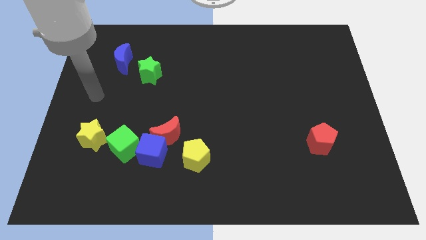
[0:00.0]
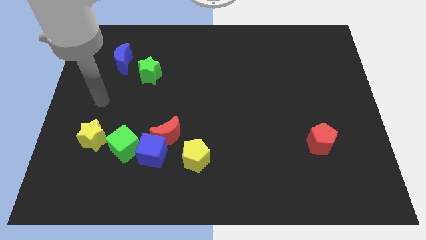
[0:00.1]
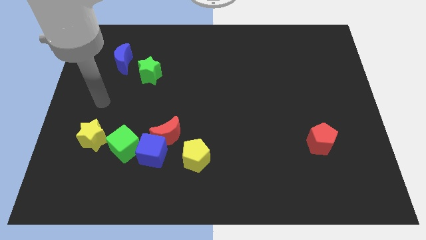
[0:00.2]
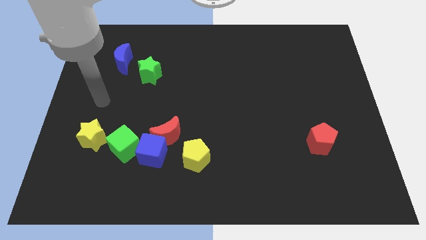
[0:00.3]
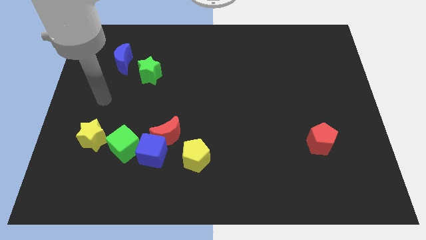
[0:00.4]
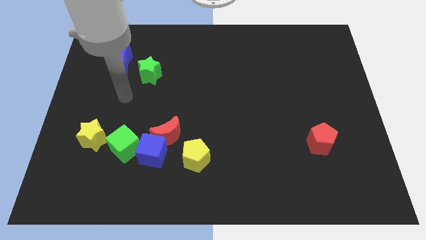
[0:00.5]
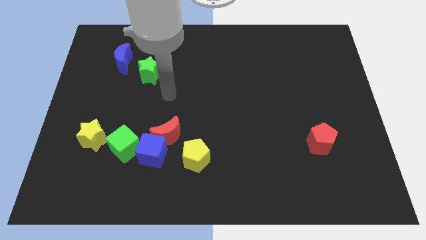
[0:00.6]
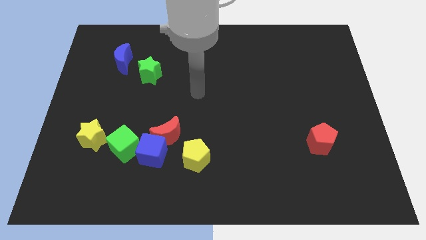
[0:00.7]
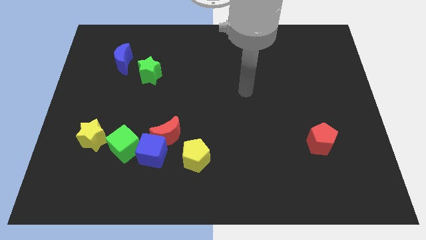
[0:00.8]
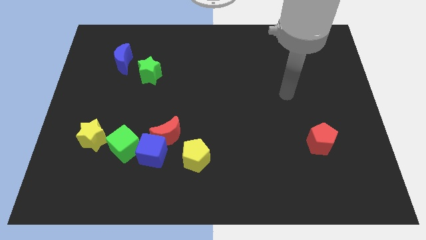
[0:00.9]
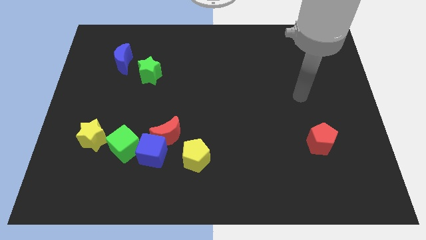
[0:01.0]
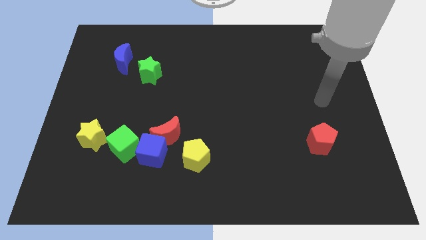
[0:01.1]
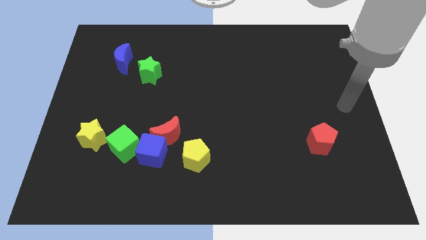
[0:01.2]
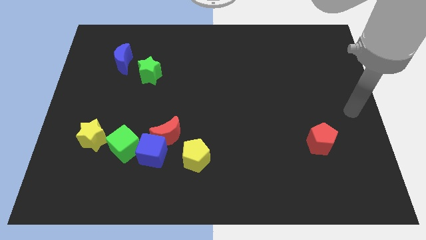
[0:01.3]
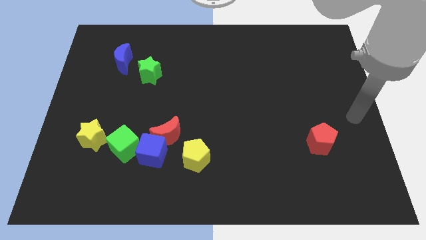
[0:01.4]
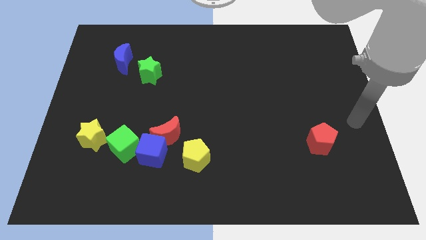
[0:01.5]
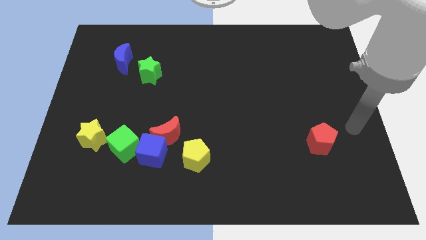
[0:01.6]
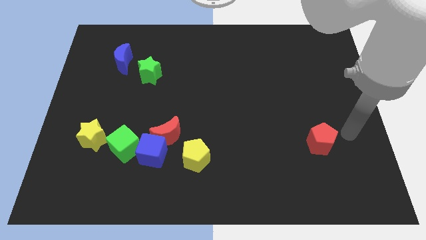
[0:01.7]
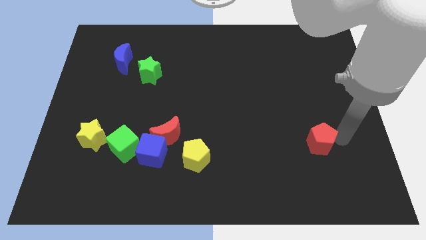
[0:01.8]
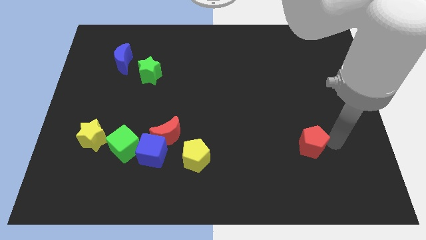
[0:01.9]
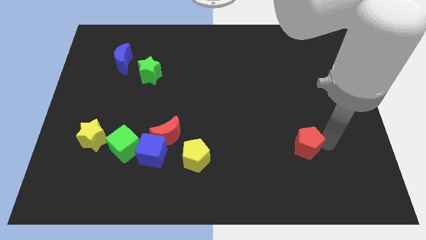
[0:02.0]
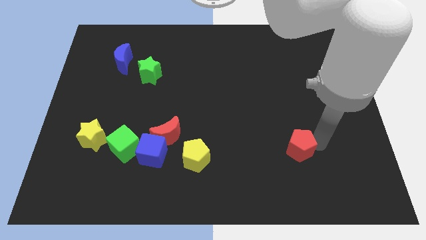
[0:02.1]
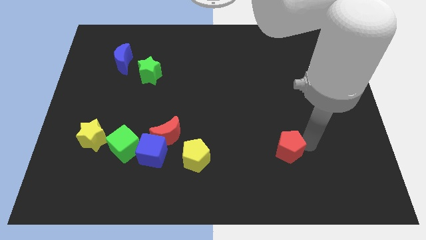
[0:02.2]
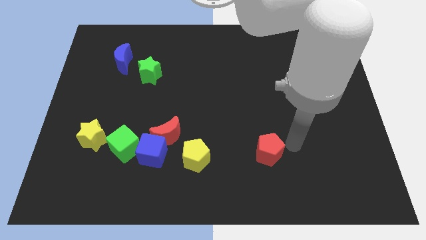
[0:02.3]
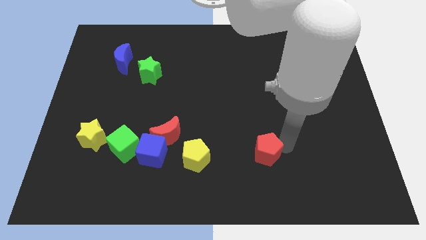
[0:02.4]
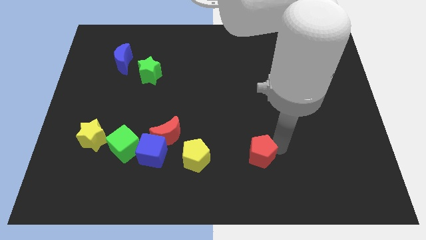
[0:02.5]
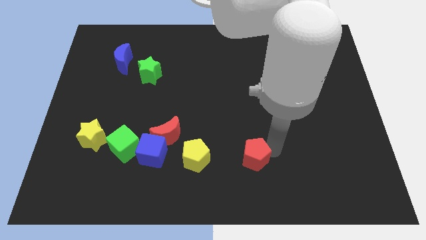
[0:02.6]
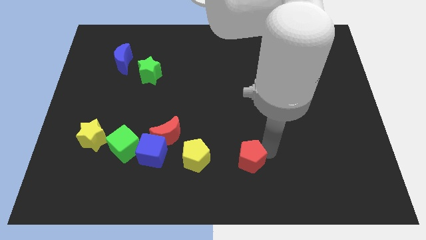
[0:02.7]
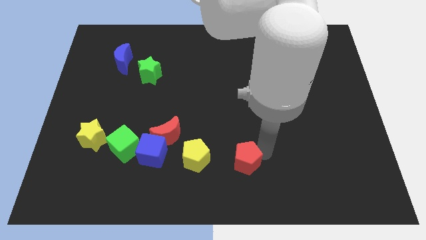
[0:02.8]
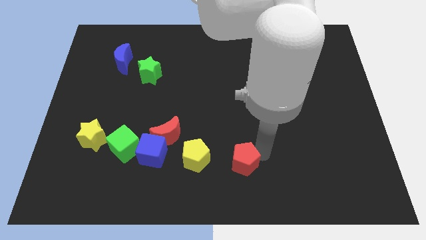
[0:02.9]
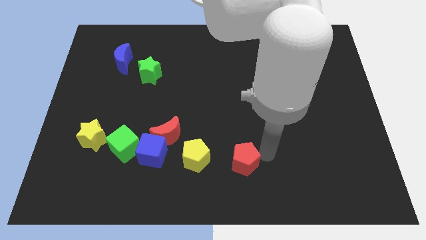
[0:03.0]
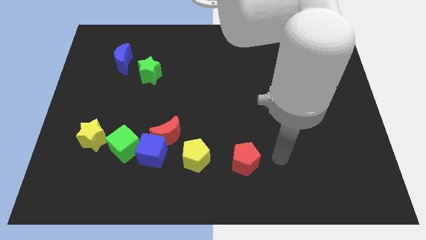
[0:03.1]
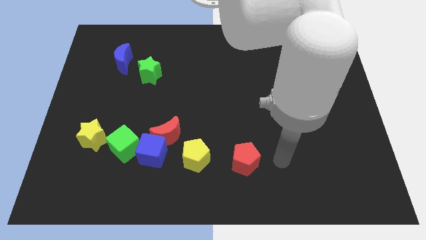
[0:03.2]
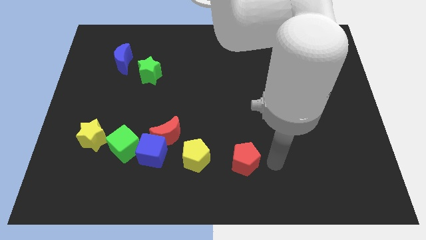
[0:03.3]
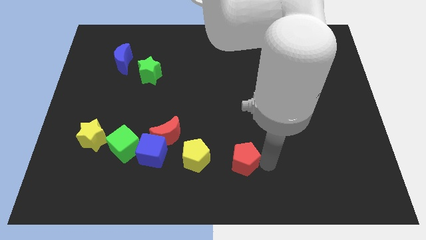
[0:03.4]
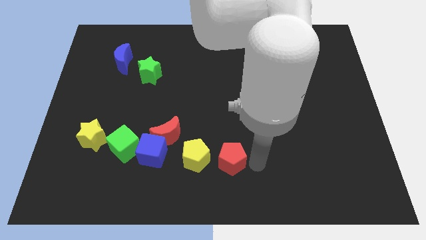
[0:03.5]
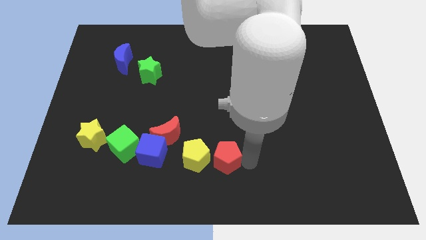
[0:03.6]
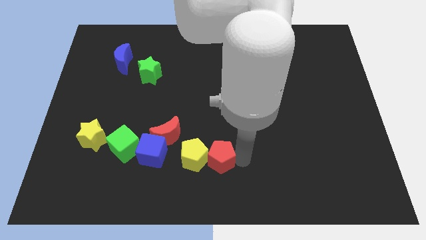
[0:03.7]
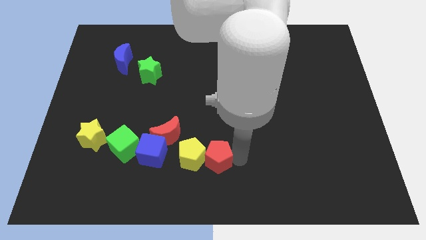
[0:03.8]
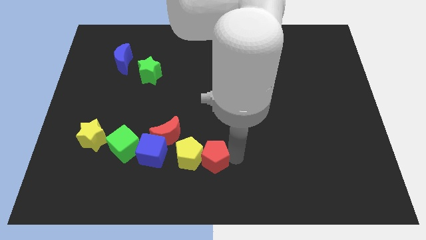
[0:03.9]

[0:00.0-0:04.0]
move the red pentagon towards the yellow pentagon

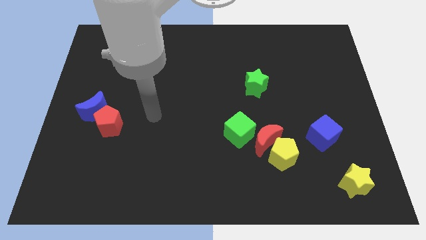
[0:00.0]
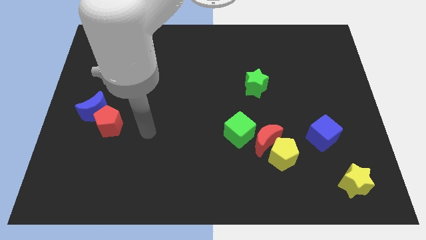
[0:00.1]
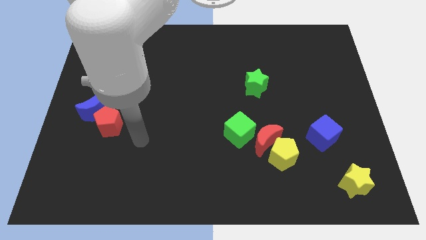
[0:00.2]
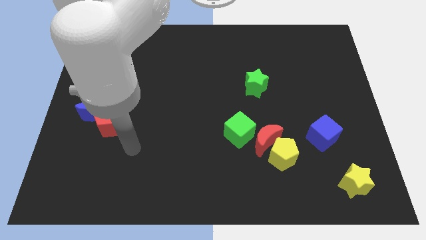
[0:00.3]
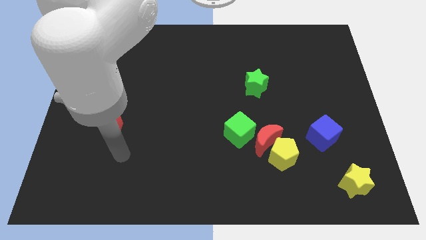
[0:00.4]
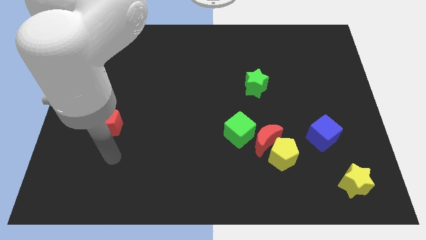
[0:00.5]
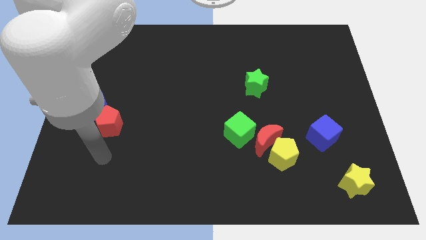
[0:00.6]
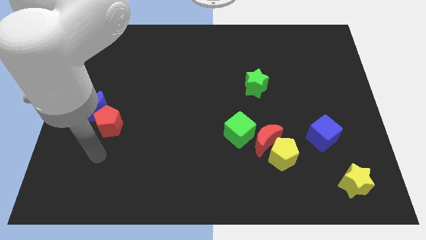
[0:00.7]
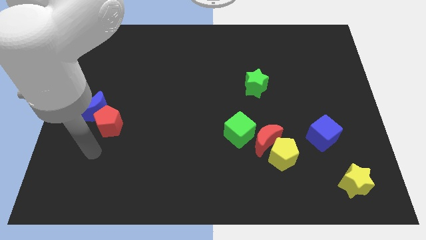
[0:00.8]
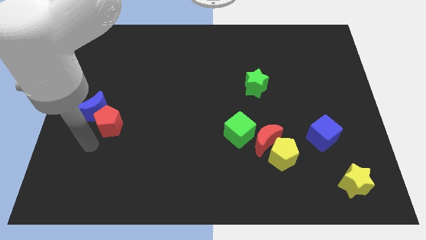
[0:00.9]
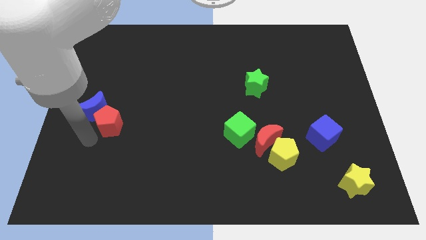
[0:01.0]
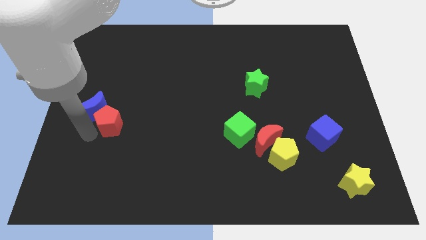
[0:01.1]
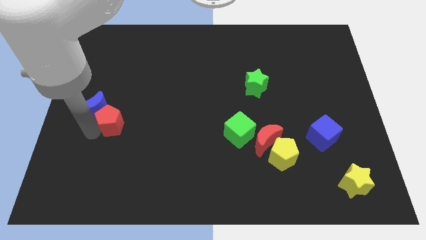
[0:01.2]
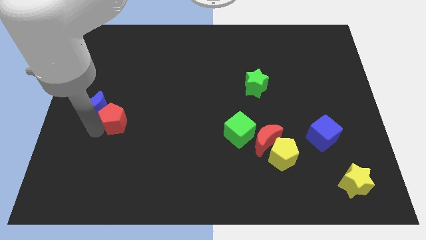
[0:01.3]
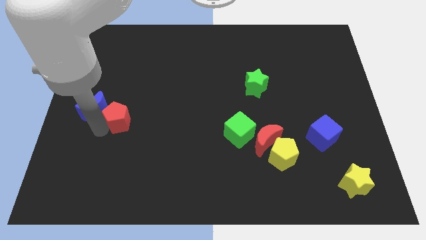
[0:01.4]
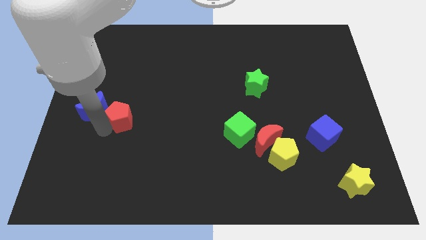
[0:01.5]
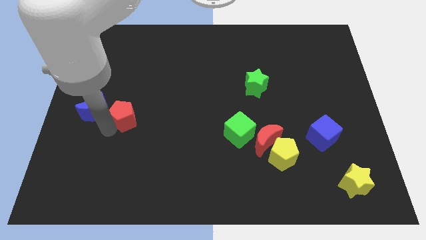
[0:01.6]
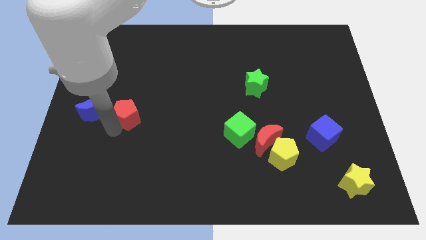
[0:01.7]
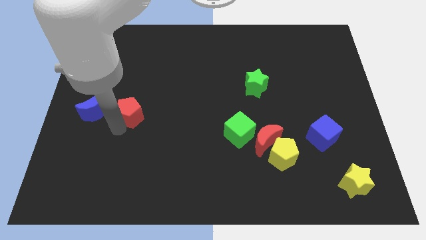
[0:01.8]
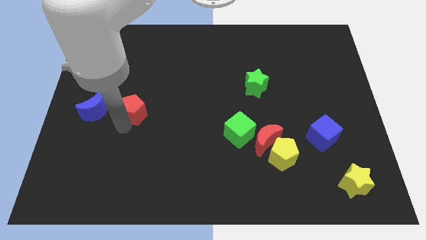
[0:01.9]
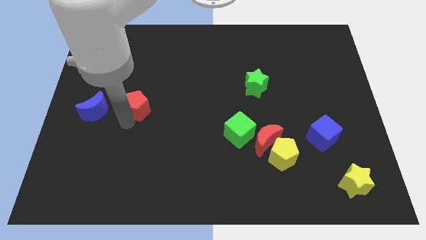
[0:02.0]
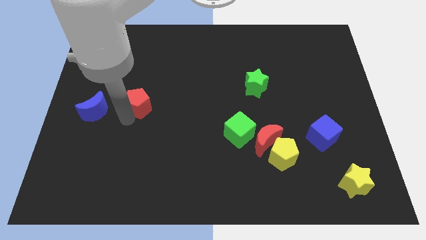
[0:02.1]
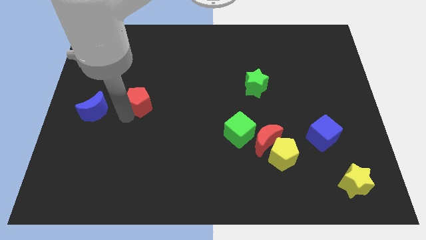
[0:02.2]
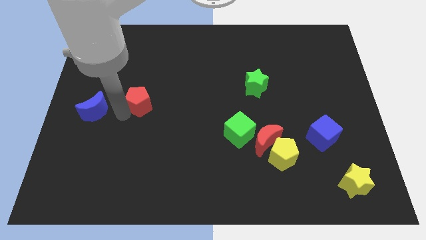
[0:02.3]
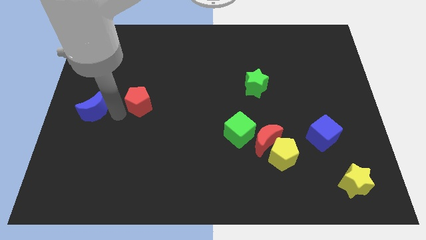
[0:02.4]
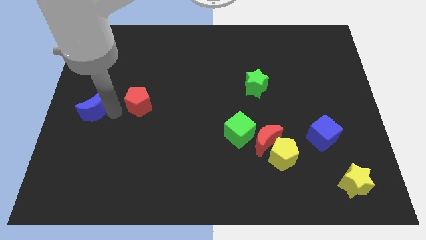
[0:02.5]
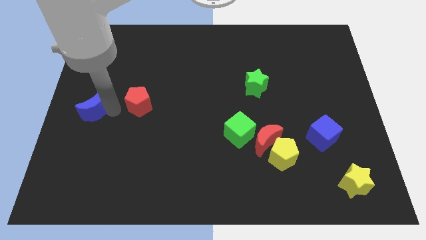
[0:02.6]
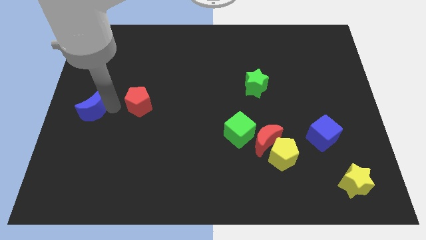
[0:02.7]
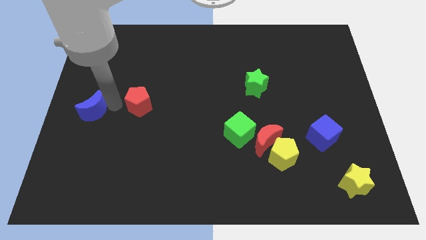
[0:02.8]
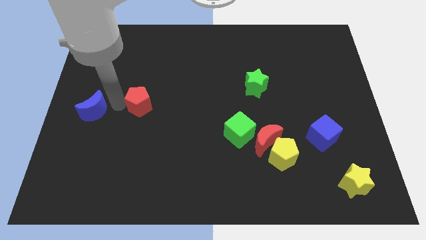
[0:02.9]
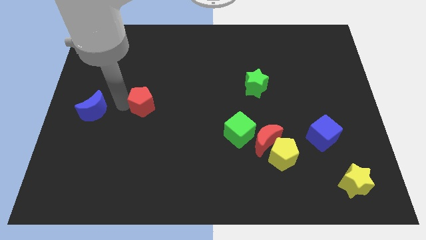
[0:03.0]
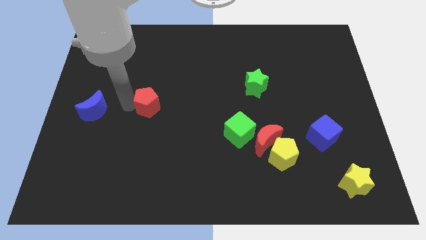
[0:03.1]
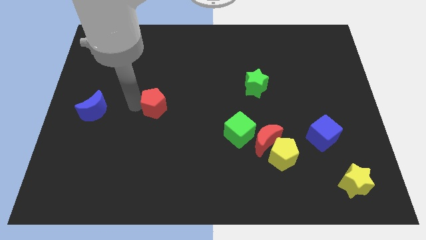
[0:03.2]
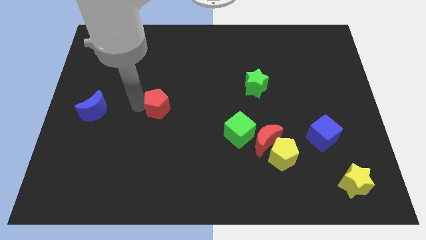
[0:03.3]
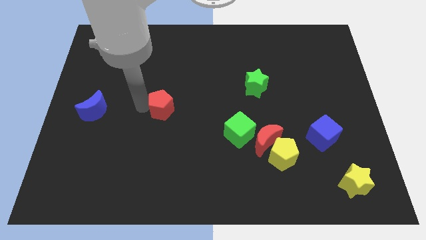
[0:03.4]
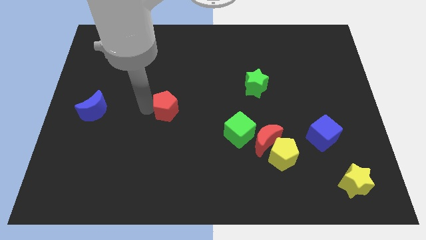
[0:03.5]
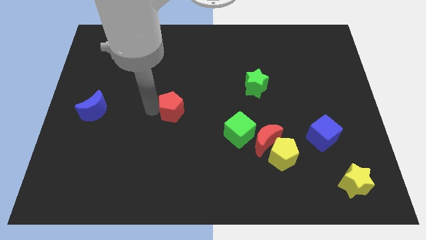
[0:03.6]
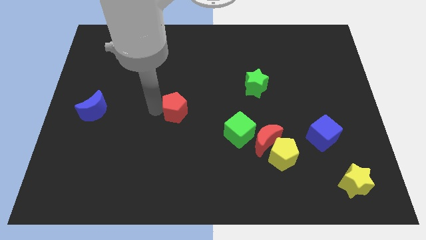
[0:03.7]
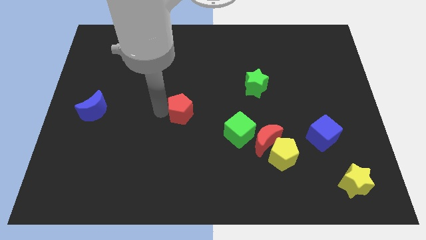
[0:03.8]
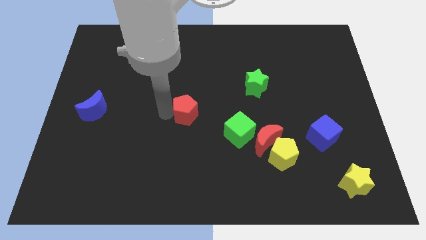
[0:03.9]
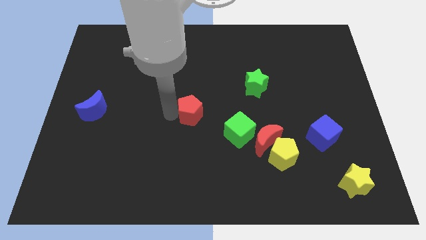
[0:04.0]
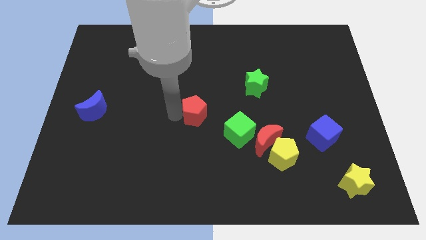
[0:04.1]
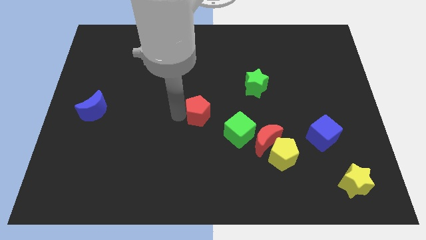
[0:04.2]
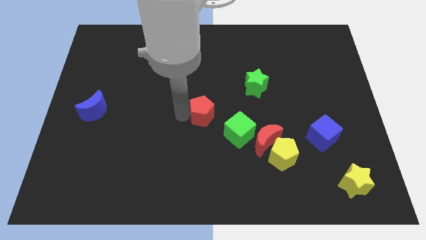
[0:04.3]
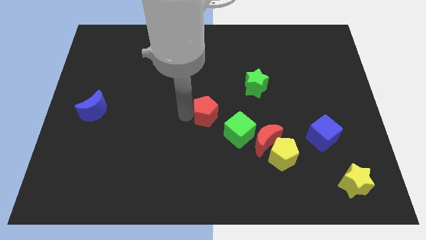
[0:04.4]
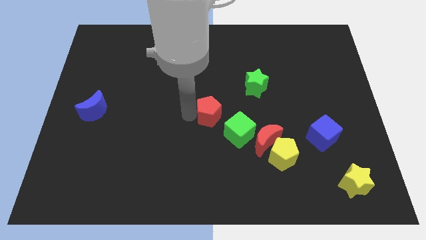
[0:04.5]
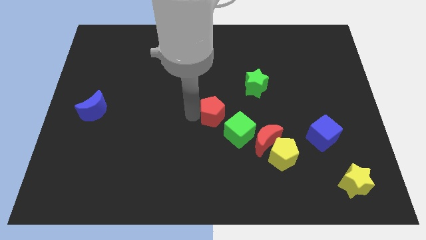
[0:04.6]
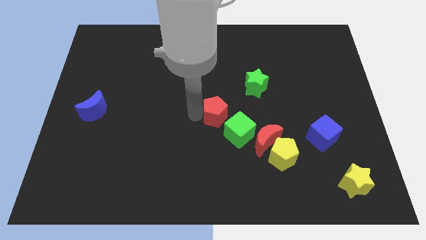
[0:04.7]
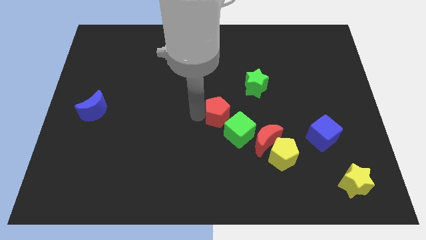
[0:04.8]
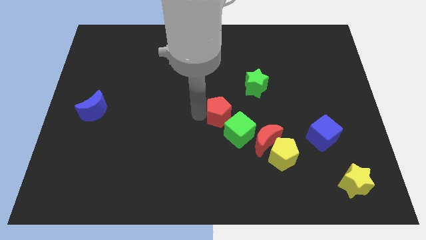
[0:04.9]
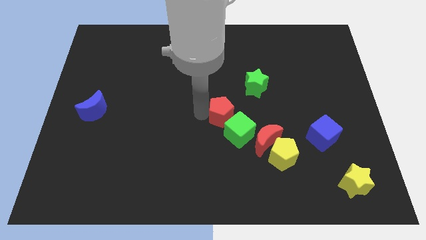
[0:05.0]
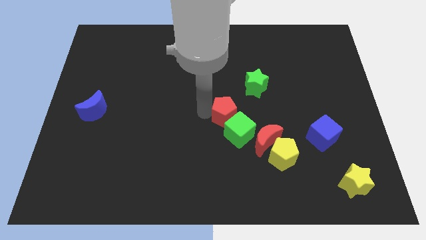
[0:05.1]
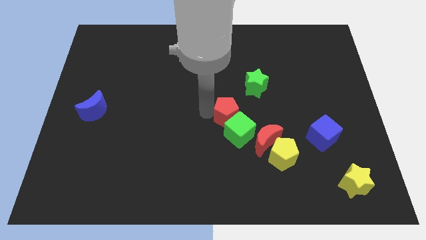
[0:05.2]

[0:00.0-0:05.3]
put the red pentagon close to the green cube
